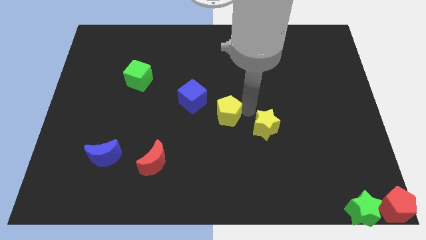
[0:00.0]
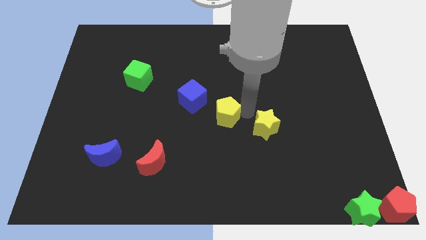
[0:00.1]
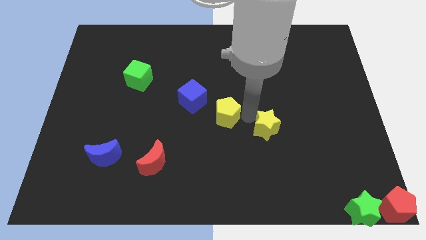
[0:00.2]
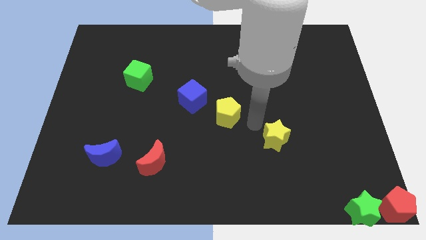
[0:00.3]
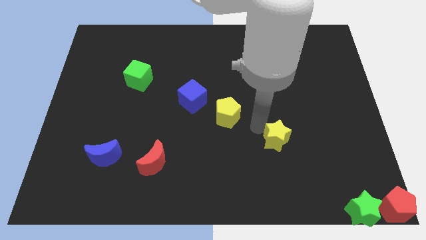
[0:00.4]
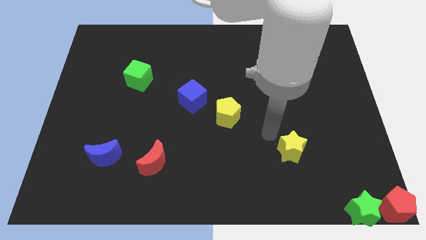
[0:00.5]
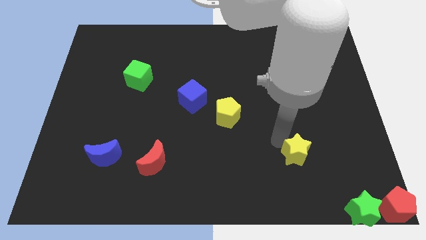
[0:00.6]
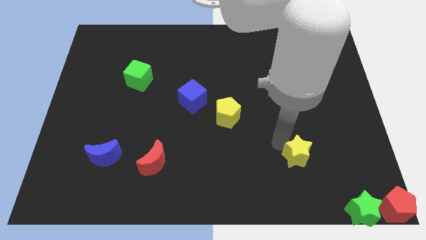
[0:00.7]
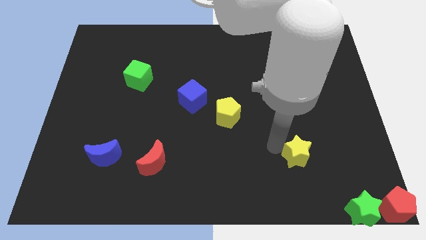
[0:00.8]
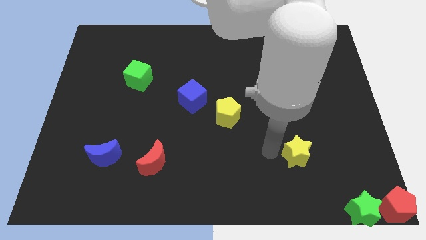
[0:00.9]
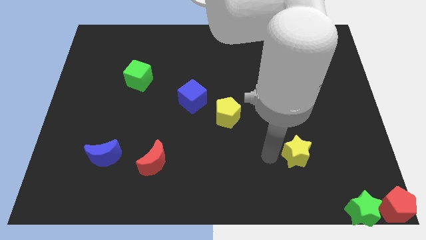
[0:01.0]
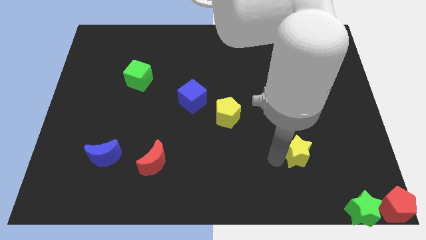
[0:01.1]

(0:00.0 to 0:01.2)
push the yellow star towards the bottom right

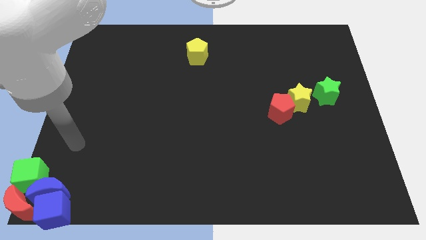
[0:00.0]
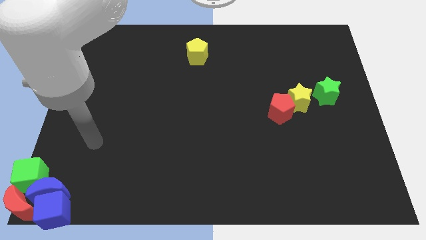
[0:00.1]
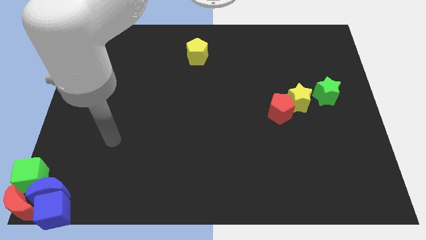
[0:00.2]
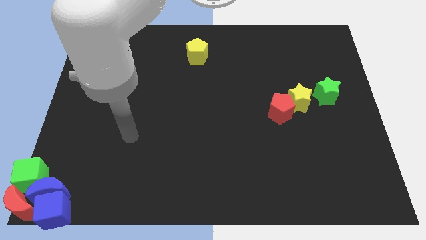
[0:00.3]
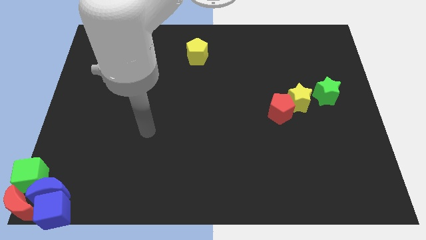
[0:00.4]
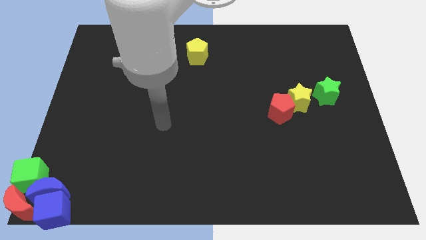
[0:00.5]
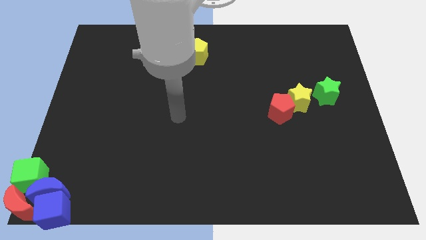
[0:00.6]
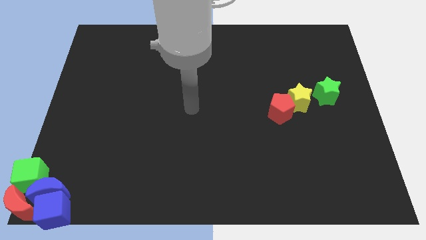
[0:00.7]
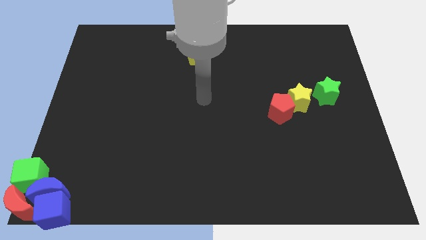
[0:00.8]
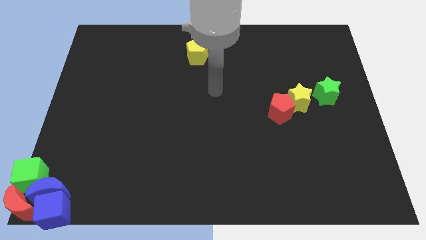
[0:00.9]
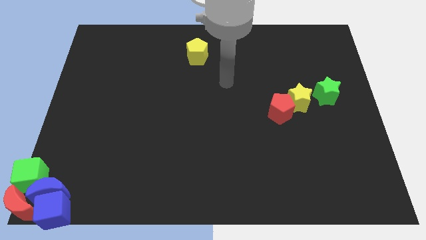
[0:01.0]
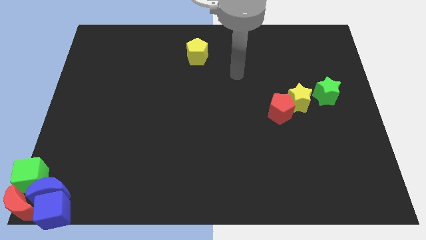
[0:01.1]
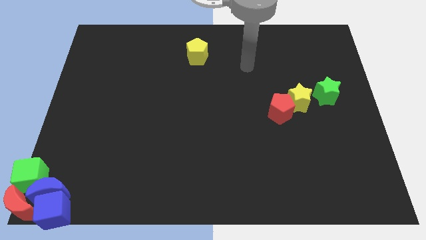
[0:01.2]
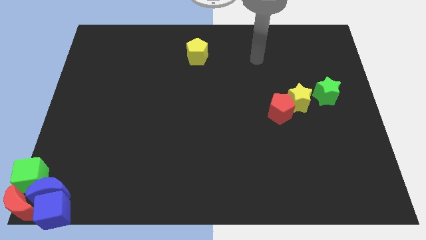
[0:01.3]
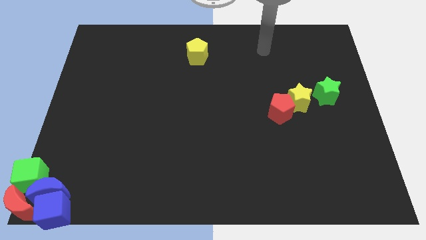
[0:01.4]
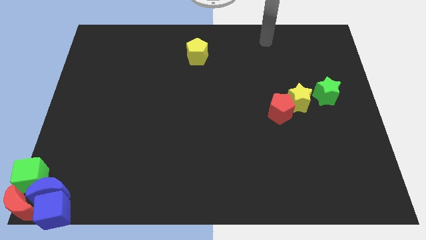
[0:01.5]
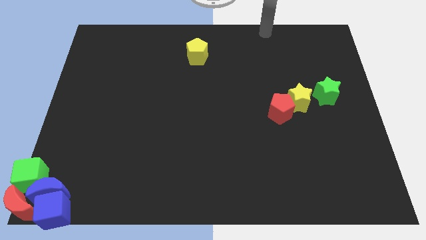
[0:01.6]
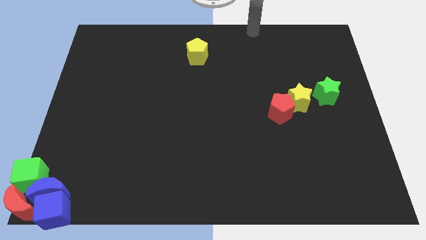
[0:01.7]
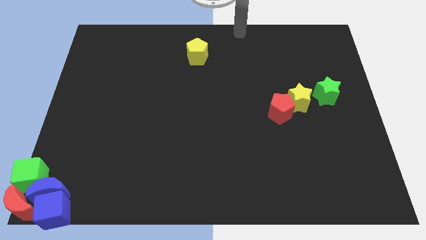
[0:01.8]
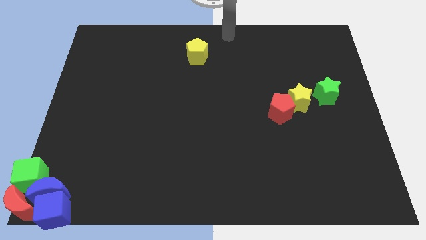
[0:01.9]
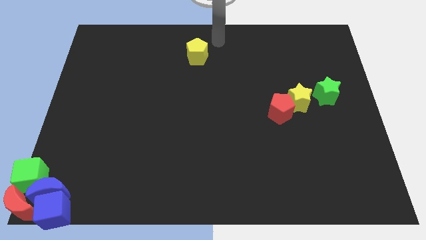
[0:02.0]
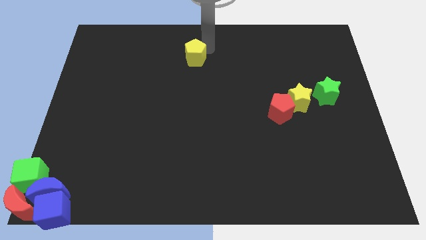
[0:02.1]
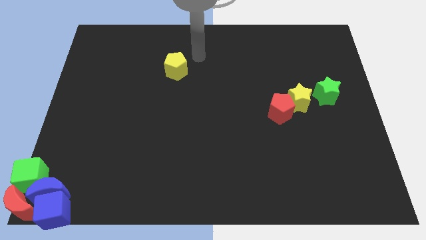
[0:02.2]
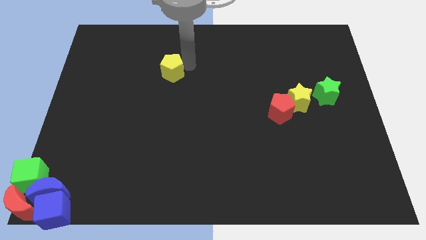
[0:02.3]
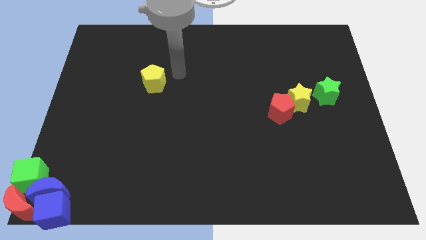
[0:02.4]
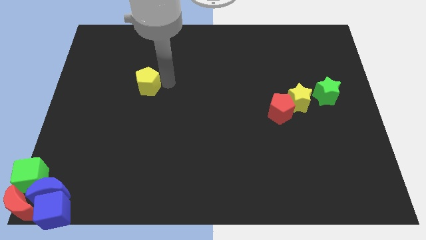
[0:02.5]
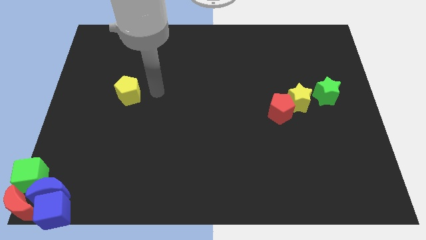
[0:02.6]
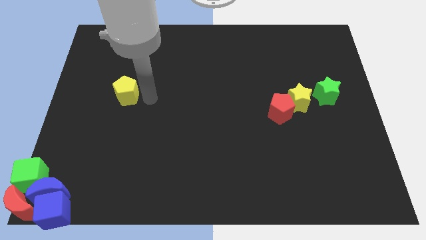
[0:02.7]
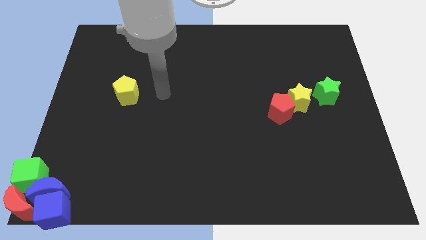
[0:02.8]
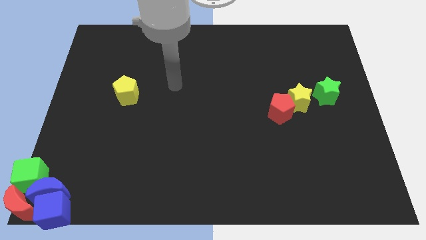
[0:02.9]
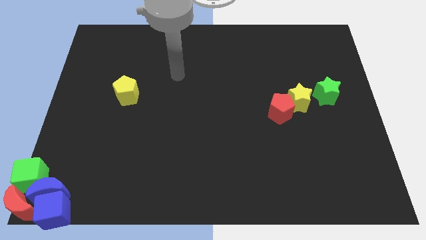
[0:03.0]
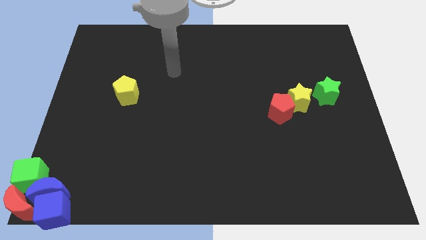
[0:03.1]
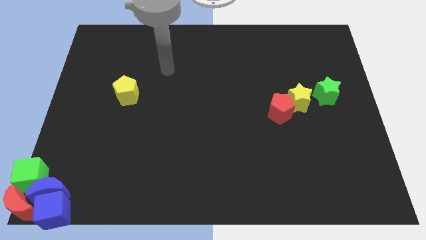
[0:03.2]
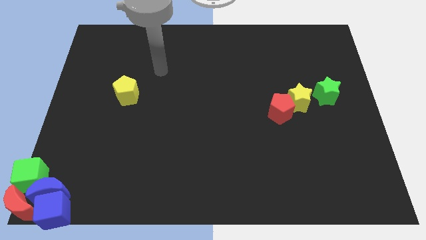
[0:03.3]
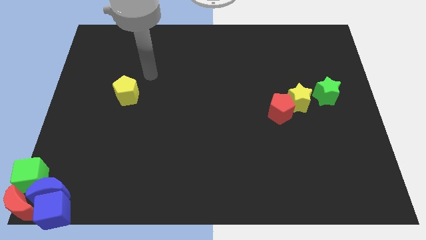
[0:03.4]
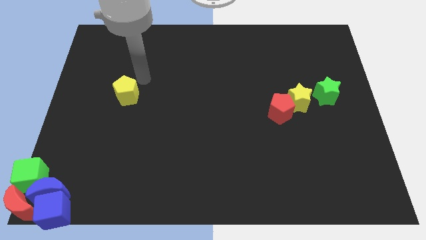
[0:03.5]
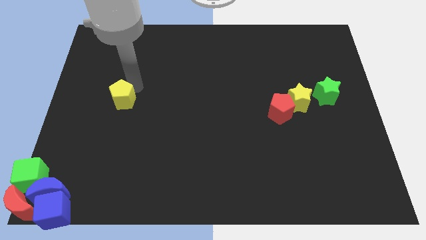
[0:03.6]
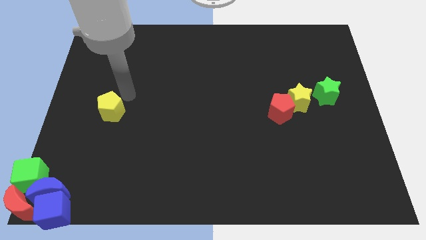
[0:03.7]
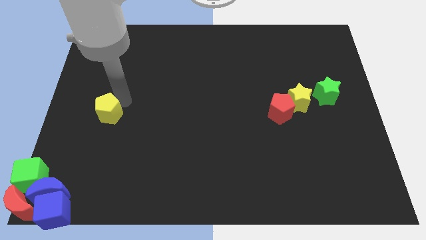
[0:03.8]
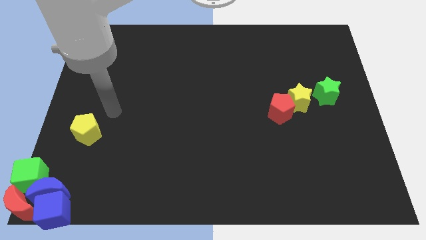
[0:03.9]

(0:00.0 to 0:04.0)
move the yellow pentagon diagonally on the top right side of the green cube

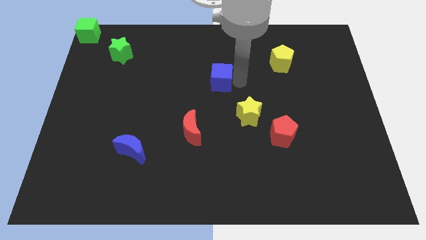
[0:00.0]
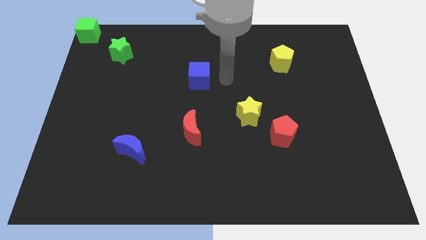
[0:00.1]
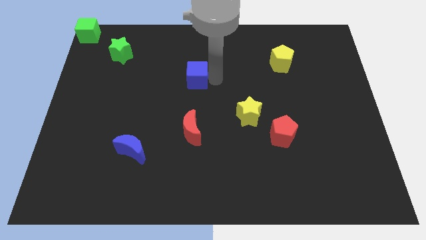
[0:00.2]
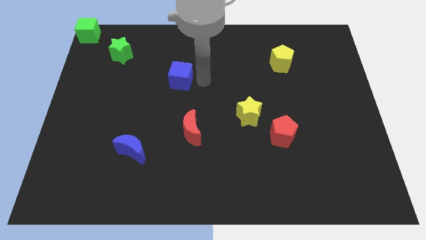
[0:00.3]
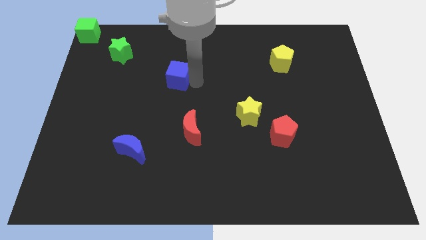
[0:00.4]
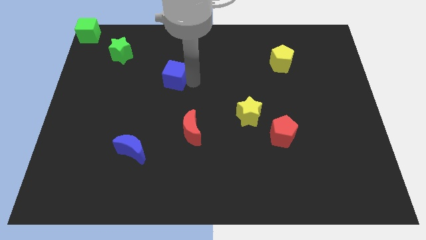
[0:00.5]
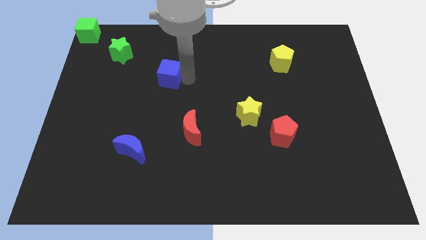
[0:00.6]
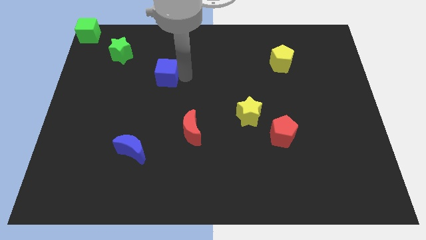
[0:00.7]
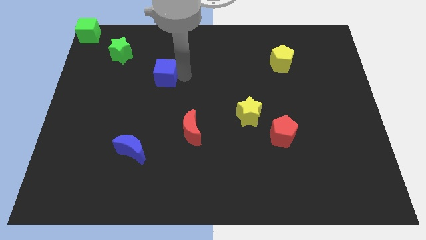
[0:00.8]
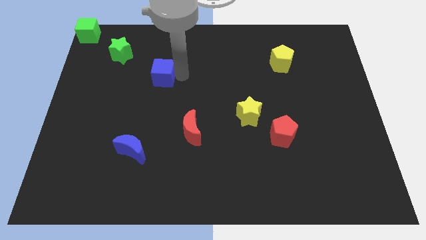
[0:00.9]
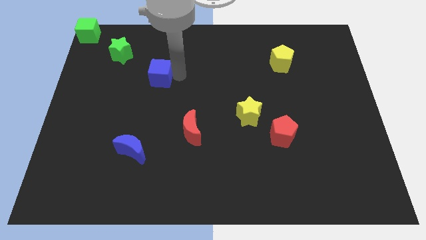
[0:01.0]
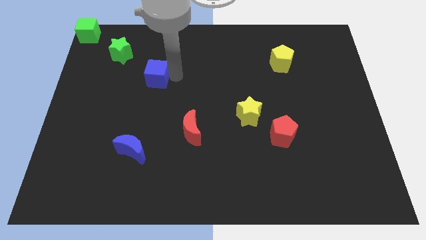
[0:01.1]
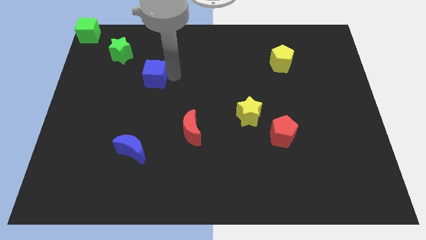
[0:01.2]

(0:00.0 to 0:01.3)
place the blue cube below the green star

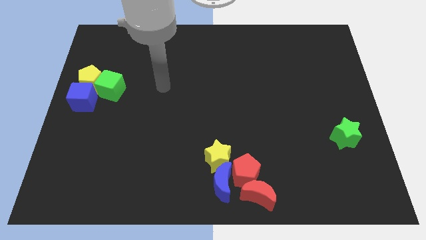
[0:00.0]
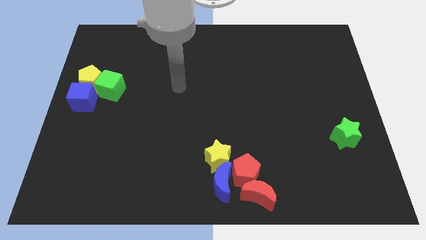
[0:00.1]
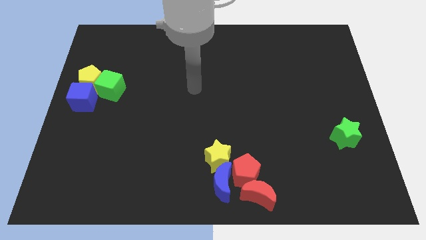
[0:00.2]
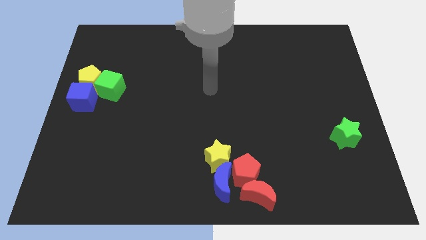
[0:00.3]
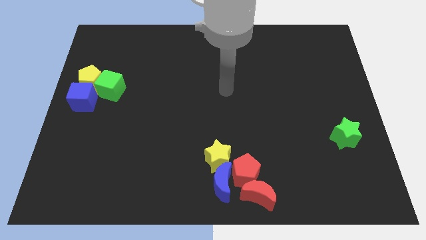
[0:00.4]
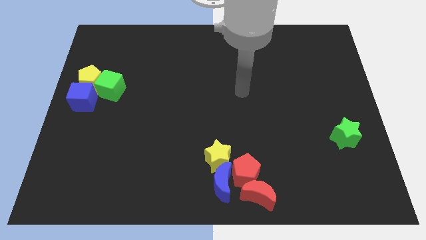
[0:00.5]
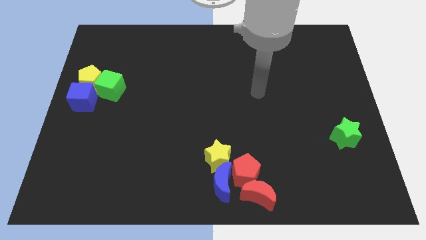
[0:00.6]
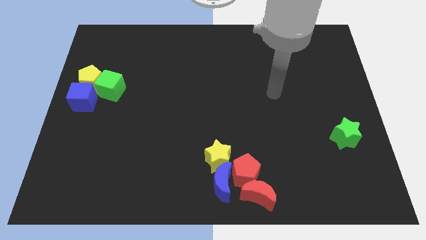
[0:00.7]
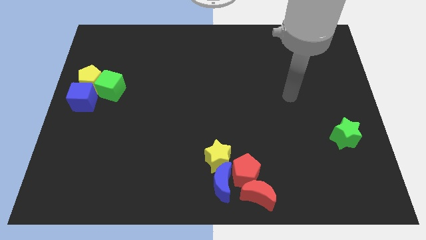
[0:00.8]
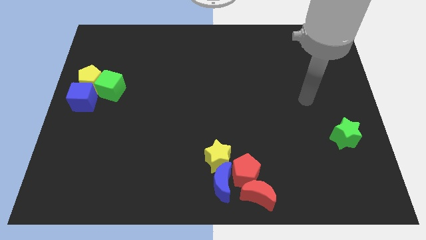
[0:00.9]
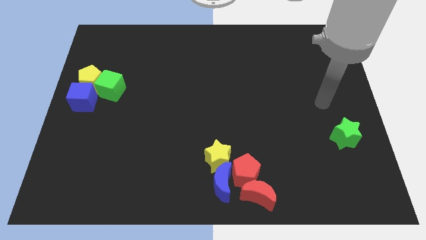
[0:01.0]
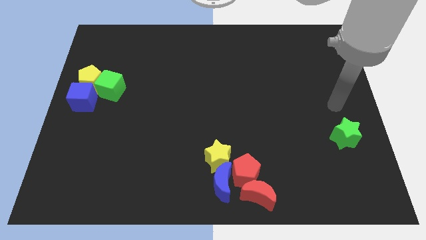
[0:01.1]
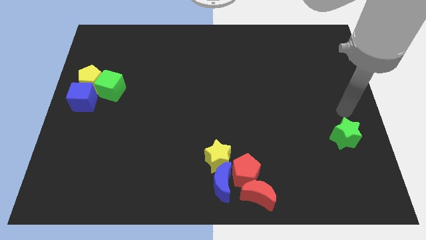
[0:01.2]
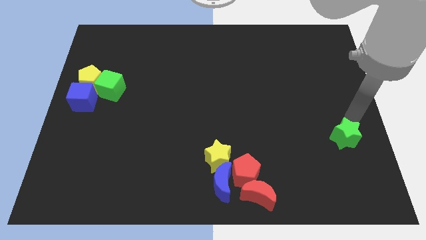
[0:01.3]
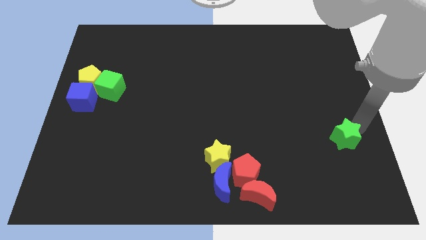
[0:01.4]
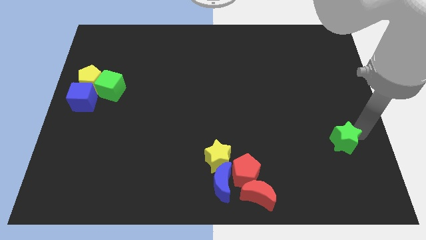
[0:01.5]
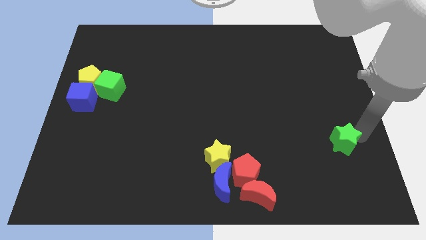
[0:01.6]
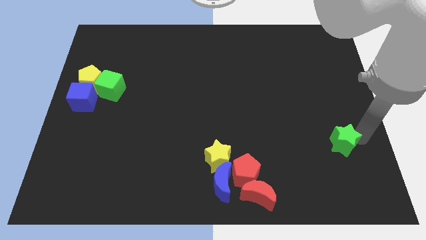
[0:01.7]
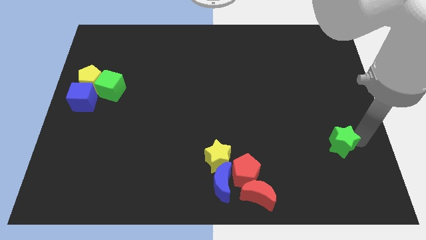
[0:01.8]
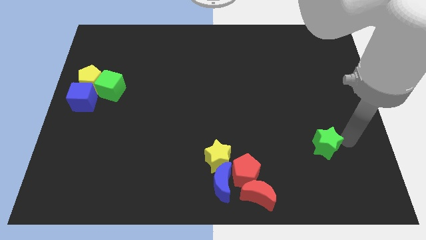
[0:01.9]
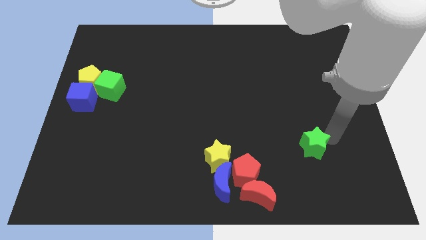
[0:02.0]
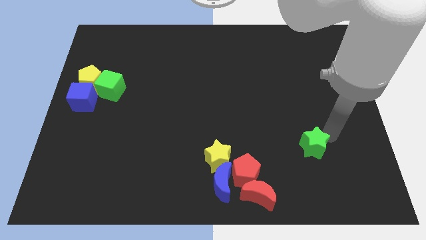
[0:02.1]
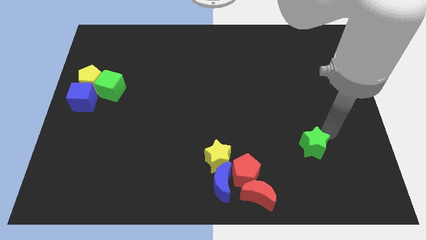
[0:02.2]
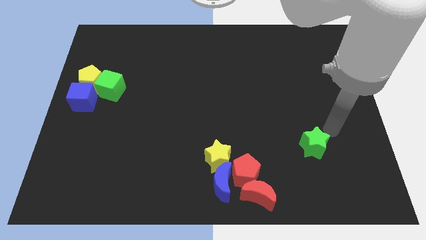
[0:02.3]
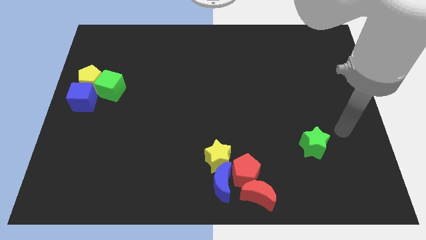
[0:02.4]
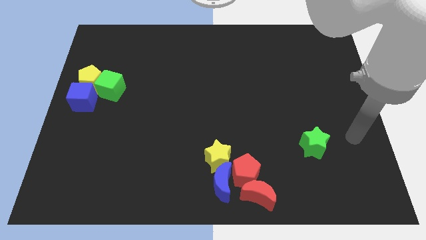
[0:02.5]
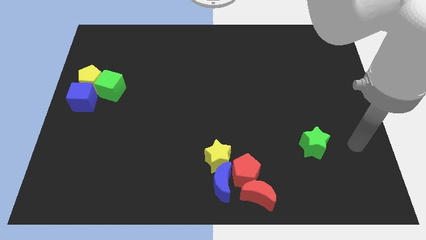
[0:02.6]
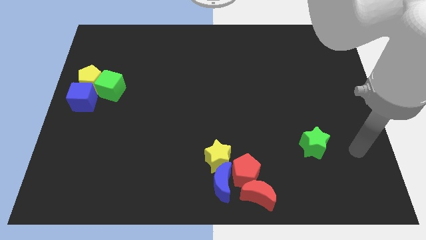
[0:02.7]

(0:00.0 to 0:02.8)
slightly move the green star to the left side
